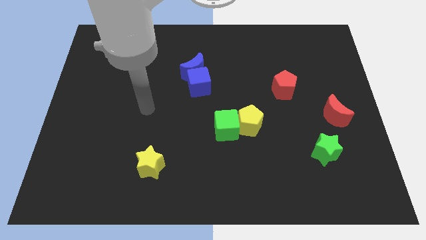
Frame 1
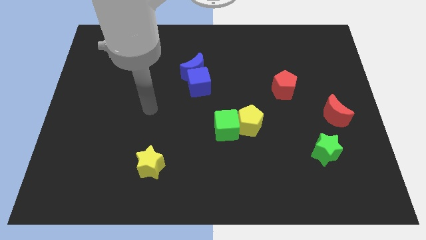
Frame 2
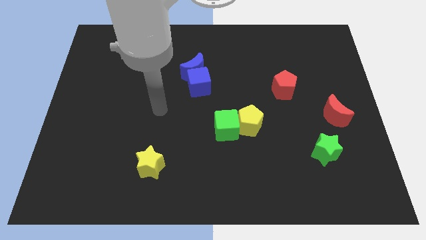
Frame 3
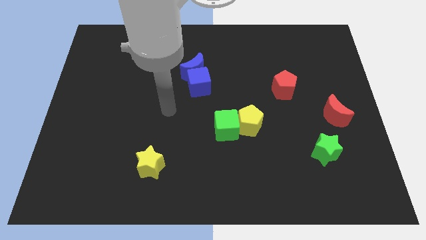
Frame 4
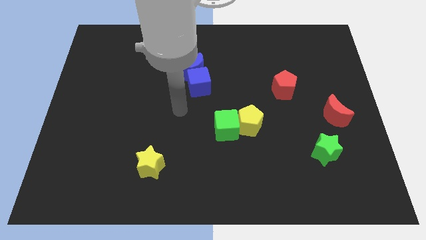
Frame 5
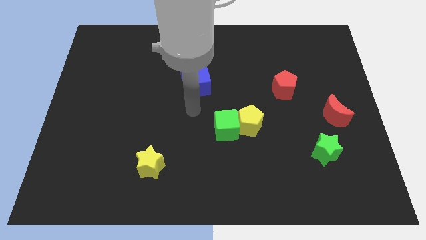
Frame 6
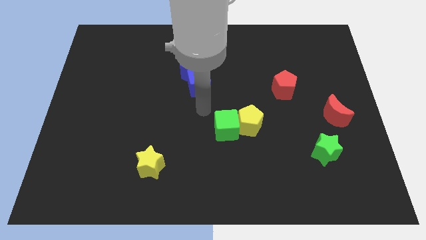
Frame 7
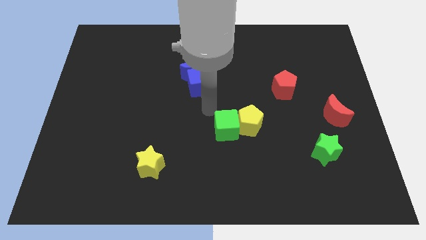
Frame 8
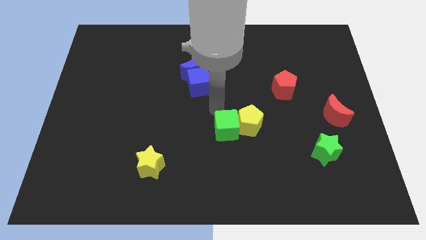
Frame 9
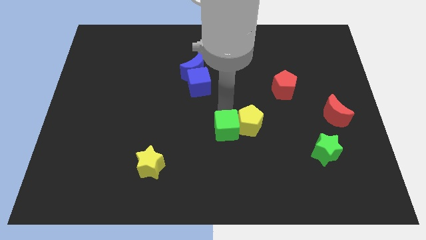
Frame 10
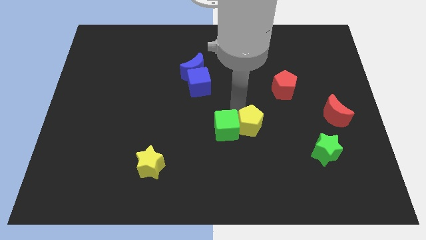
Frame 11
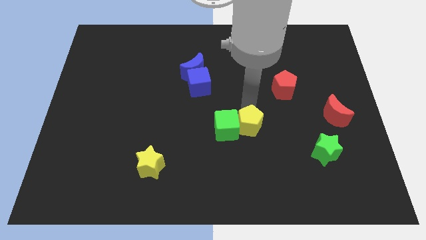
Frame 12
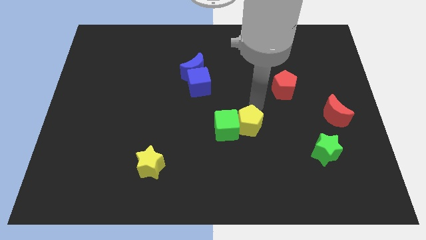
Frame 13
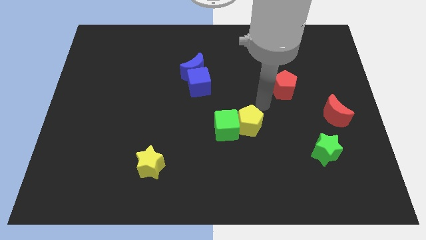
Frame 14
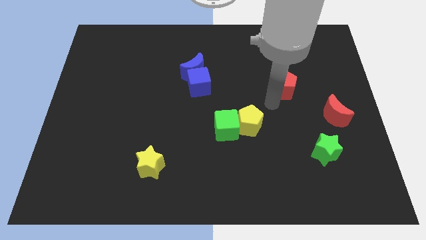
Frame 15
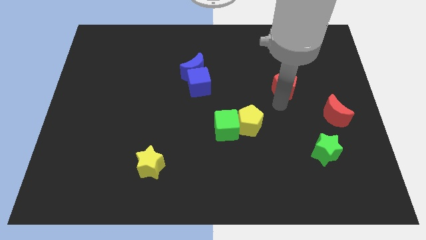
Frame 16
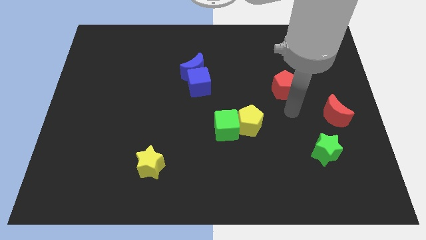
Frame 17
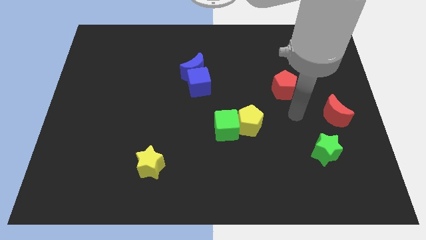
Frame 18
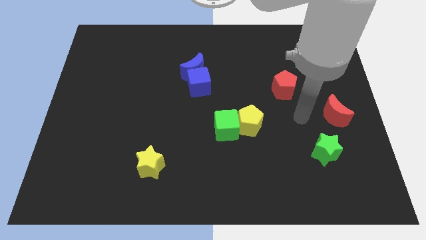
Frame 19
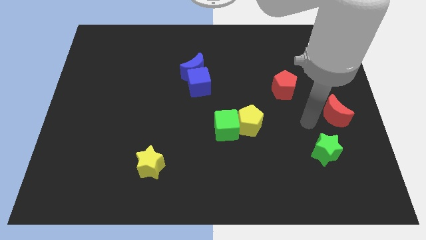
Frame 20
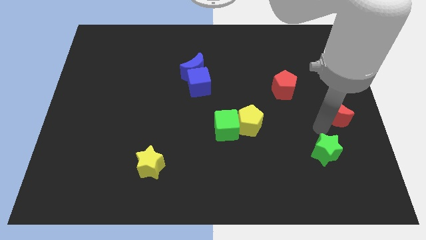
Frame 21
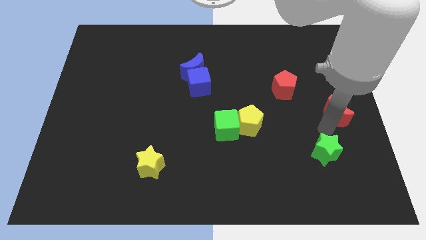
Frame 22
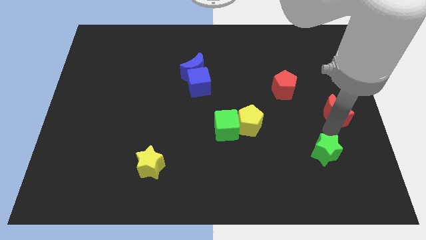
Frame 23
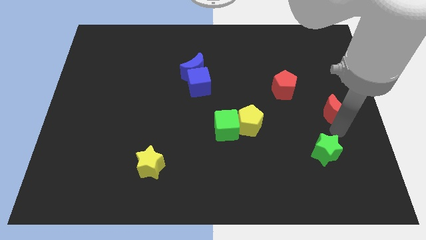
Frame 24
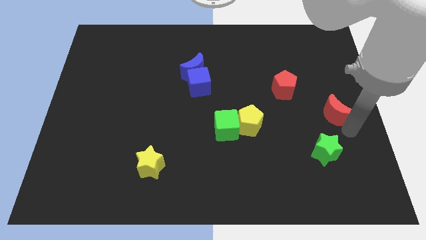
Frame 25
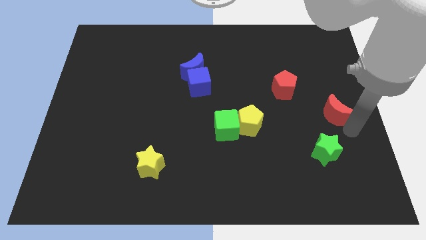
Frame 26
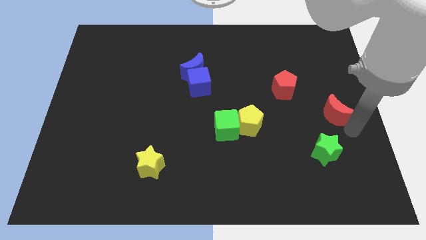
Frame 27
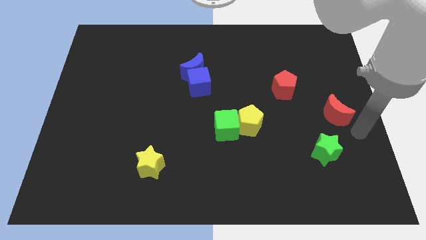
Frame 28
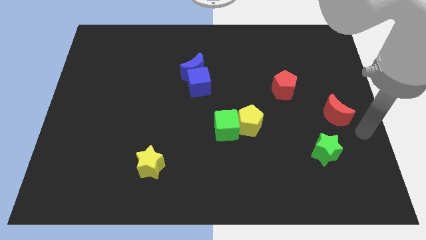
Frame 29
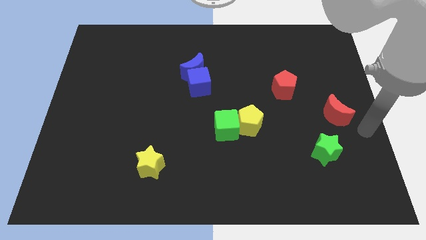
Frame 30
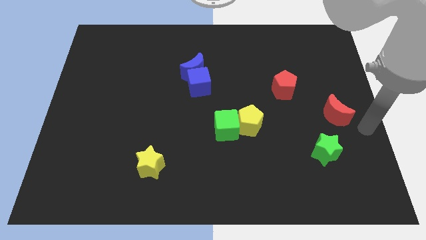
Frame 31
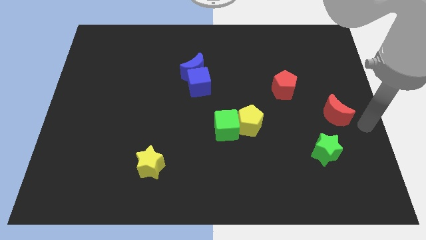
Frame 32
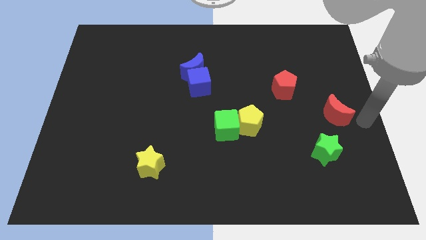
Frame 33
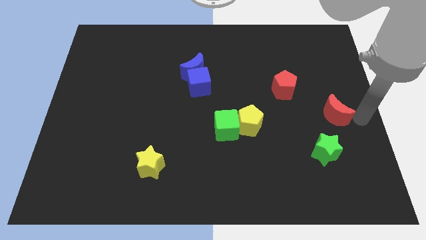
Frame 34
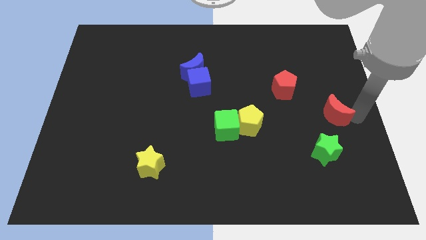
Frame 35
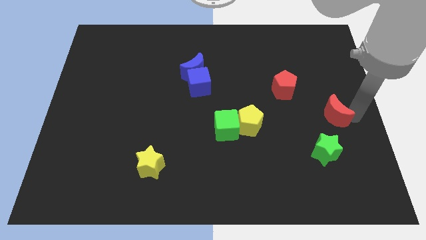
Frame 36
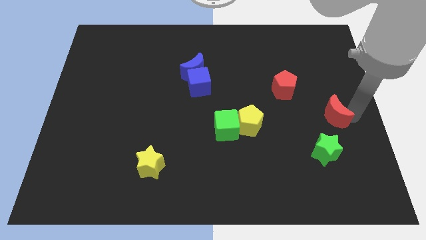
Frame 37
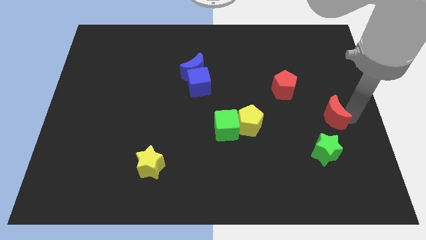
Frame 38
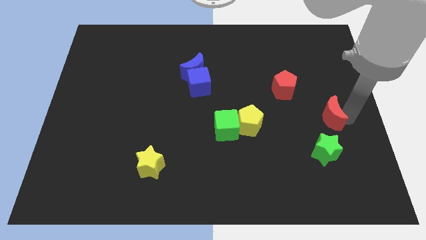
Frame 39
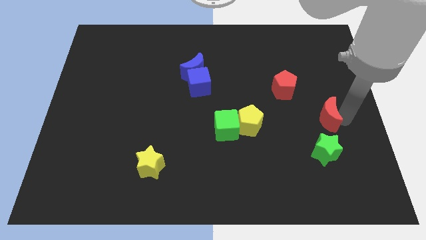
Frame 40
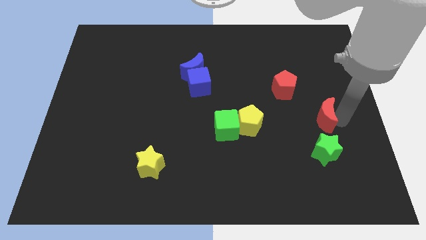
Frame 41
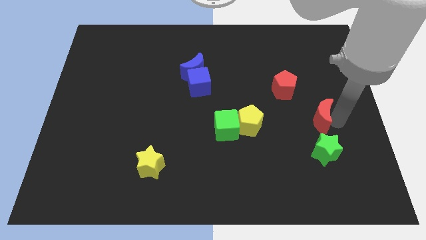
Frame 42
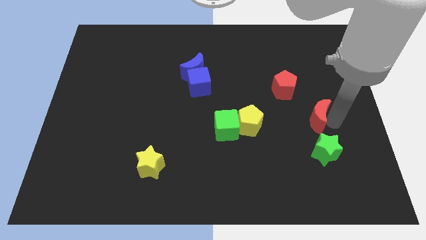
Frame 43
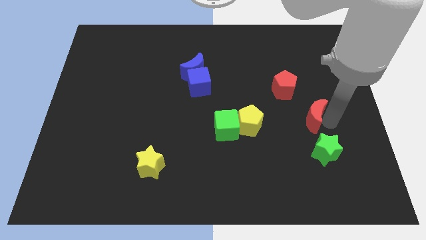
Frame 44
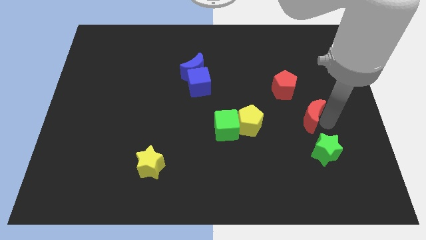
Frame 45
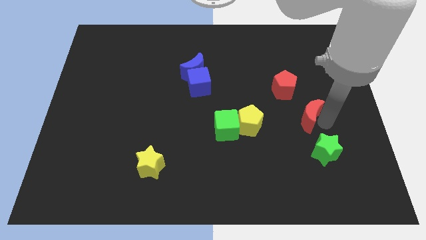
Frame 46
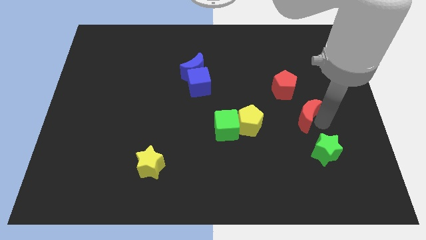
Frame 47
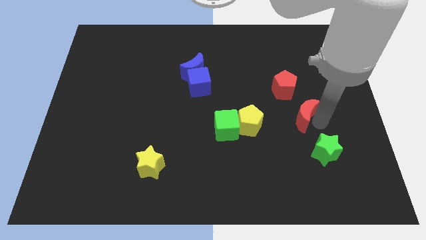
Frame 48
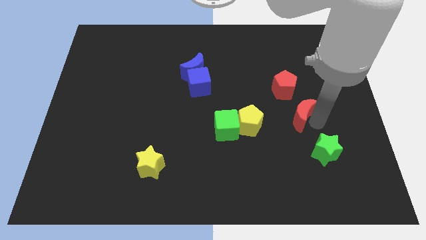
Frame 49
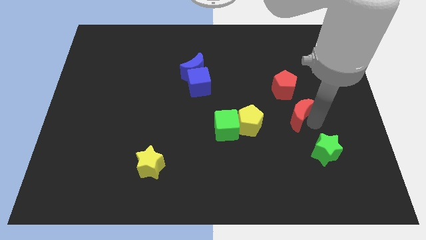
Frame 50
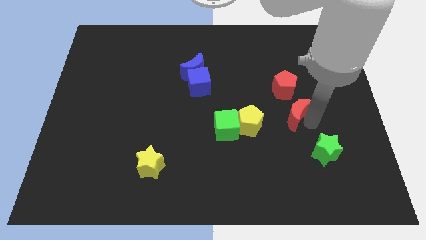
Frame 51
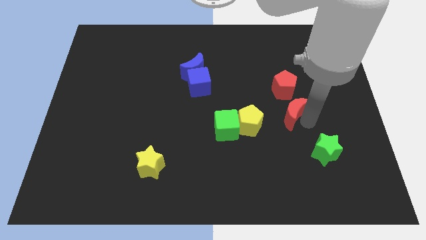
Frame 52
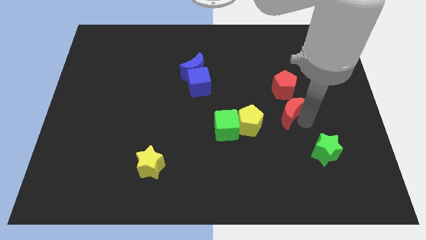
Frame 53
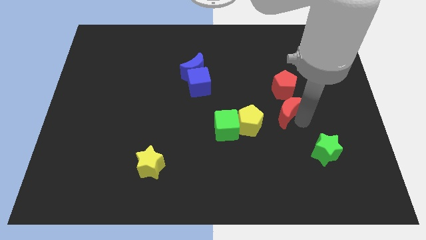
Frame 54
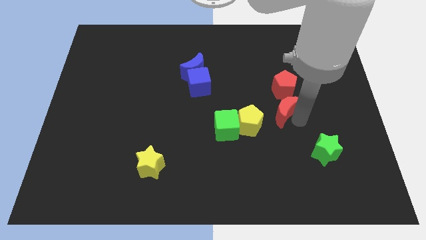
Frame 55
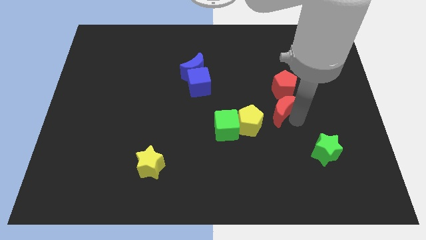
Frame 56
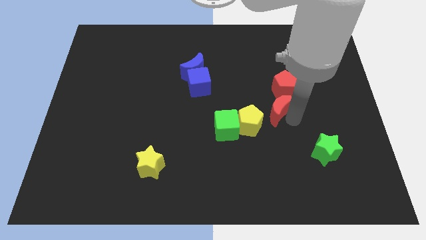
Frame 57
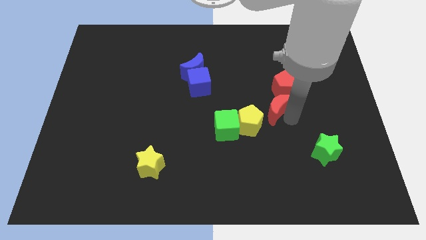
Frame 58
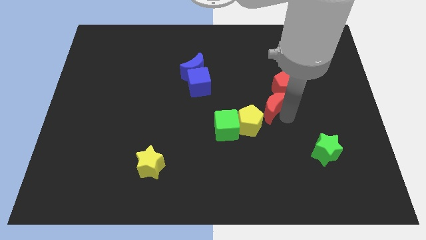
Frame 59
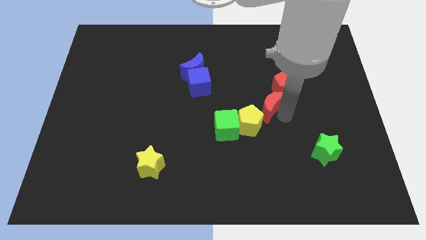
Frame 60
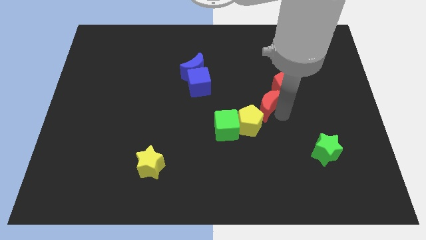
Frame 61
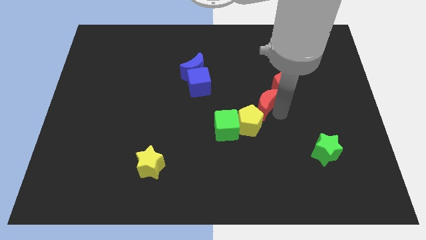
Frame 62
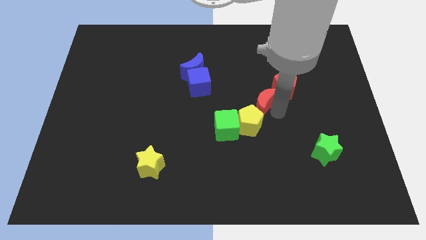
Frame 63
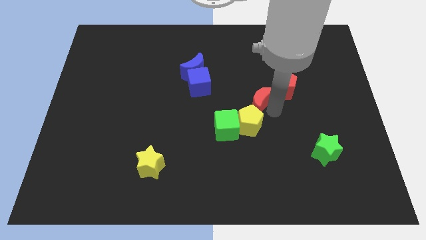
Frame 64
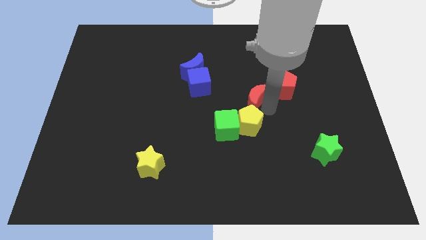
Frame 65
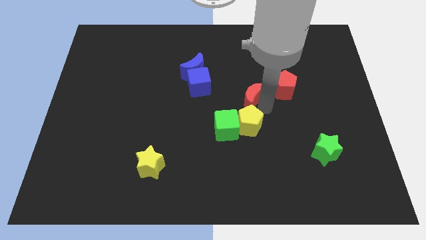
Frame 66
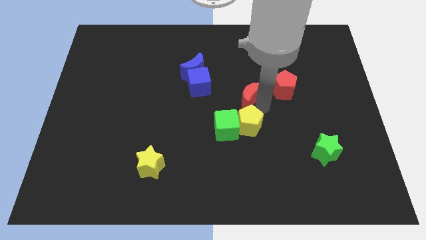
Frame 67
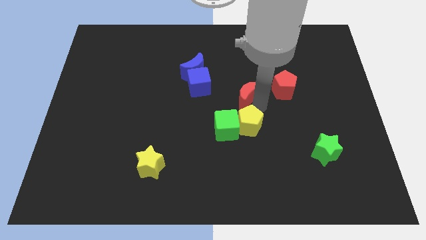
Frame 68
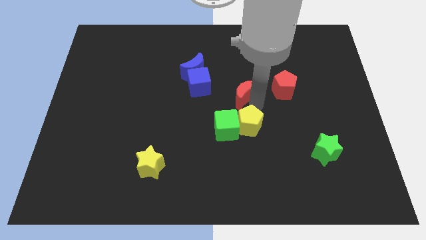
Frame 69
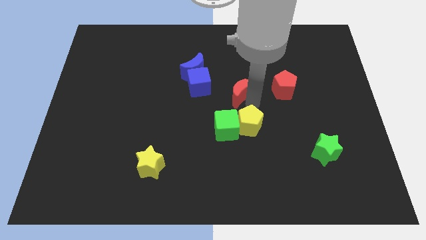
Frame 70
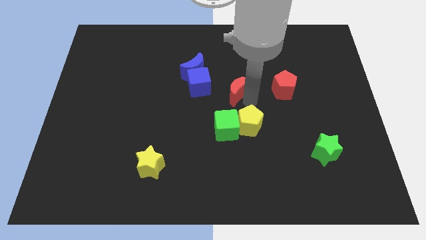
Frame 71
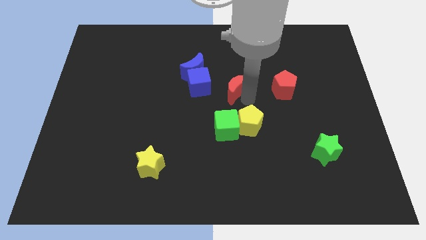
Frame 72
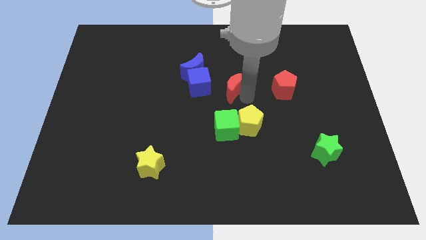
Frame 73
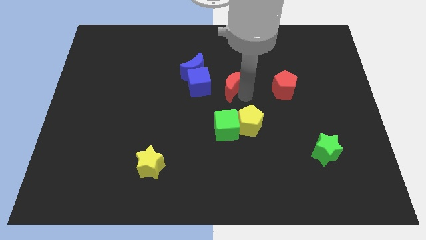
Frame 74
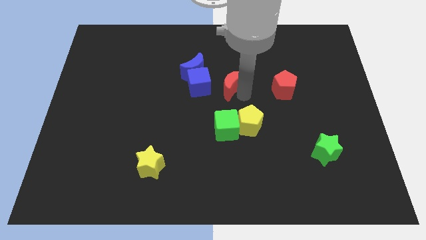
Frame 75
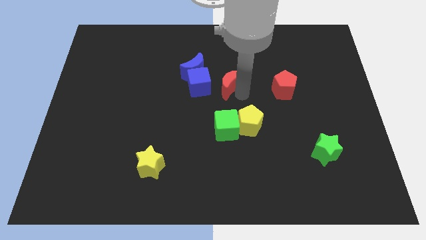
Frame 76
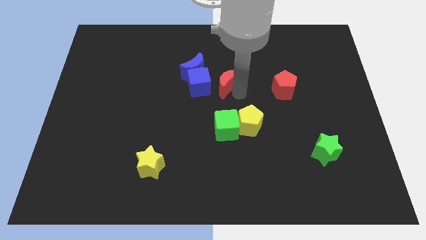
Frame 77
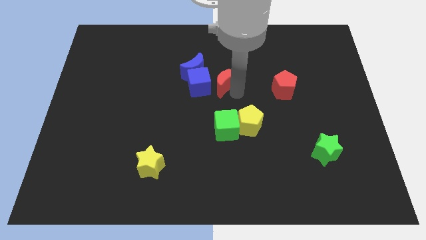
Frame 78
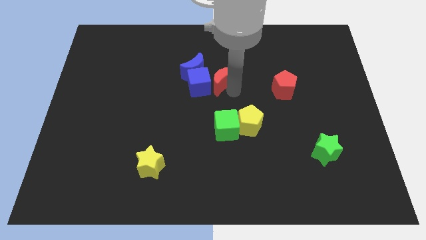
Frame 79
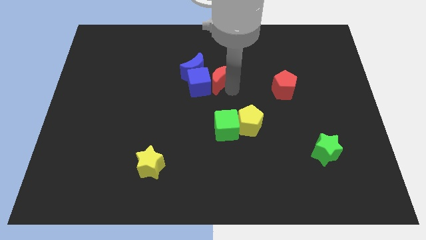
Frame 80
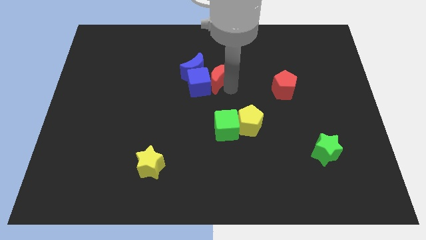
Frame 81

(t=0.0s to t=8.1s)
push the red moon close to the blue cube

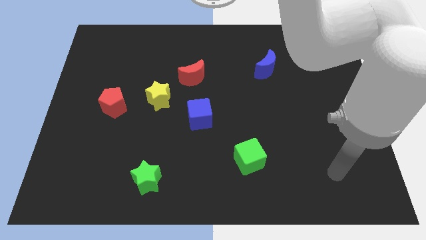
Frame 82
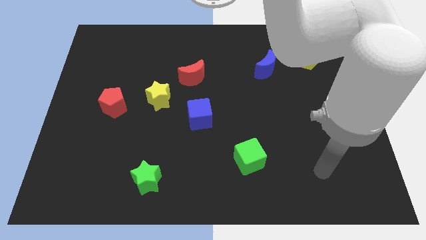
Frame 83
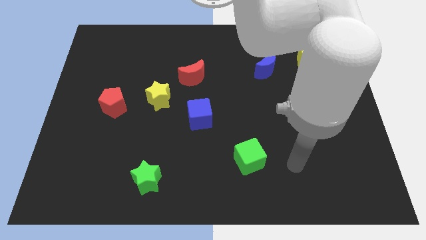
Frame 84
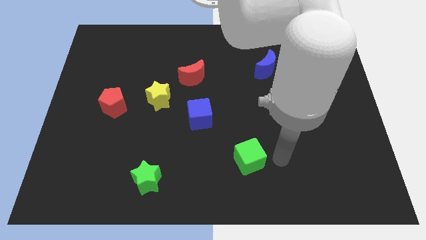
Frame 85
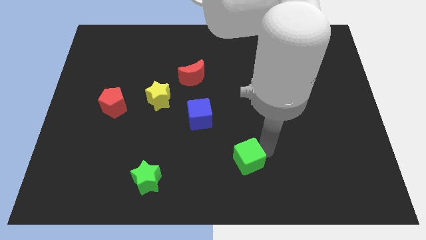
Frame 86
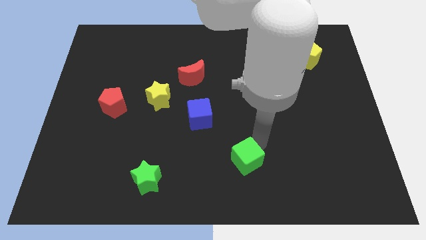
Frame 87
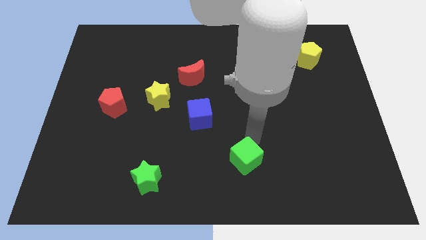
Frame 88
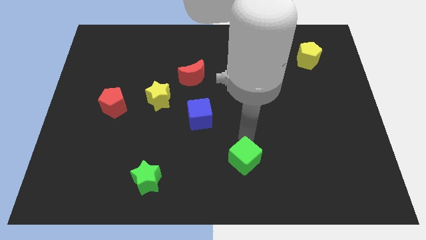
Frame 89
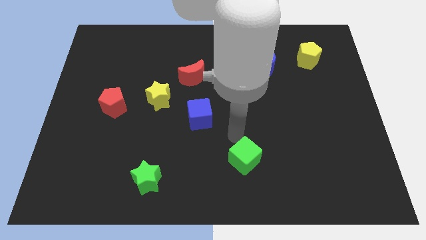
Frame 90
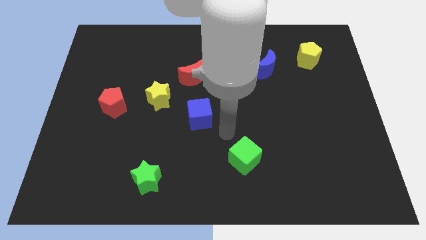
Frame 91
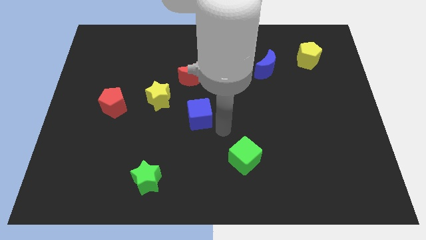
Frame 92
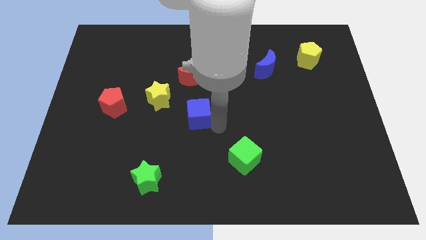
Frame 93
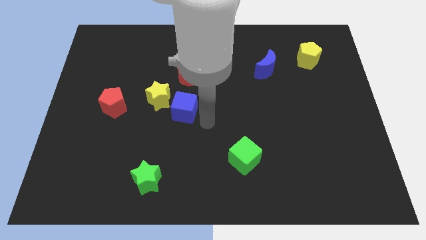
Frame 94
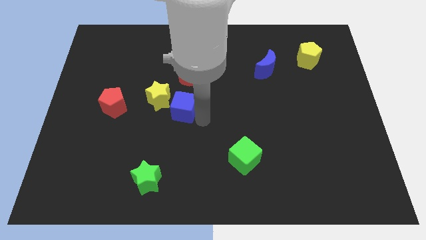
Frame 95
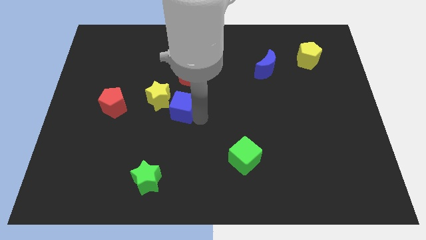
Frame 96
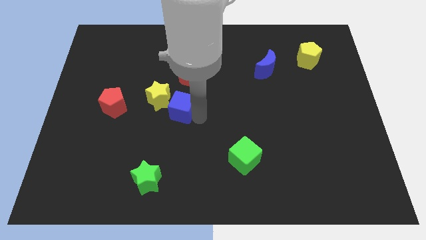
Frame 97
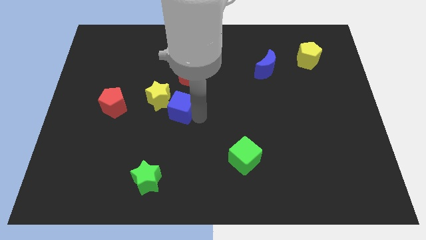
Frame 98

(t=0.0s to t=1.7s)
slide the blue cube close to the yellow star
